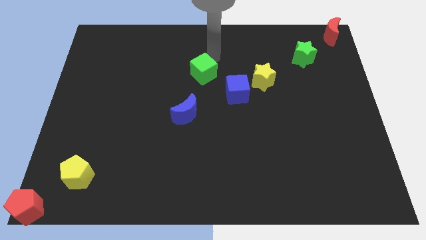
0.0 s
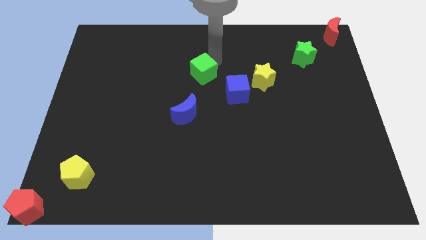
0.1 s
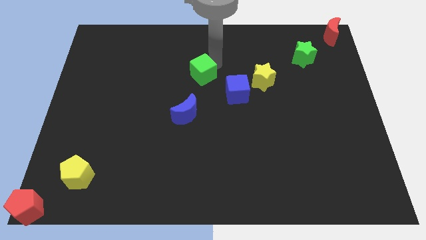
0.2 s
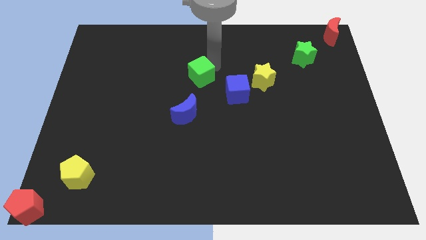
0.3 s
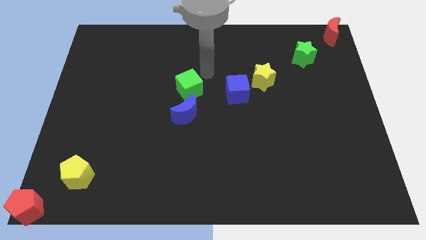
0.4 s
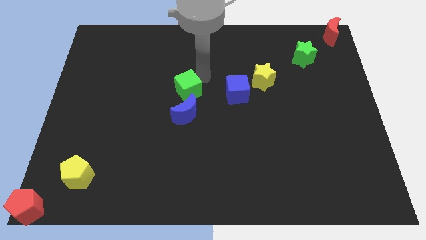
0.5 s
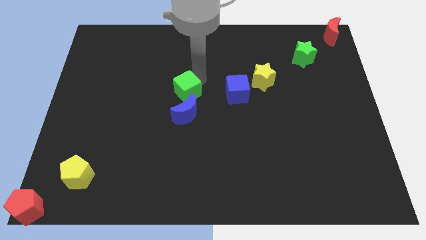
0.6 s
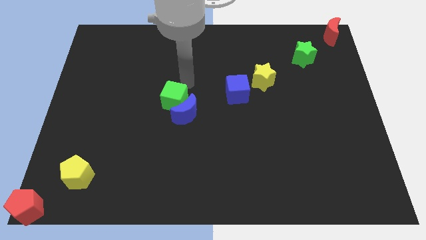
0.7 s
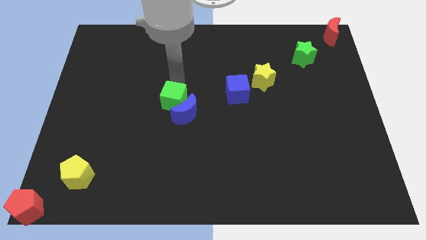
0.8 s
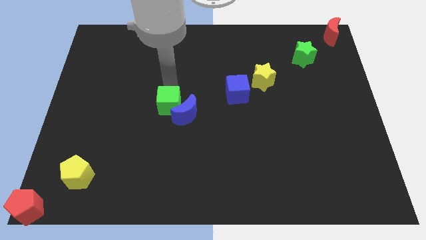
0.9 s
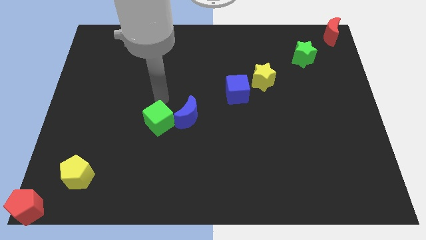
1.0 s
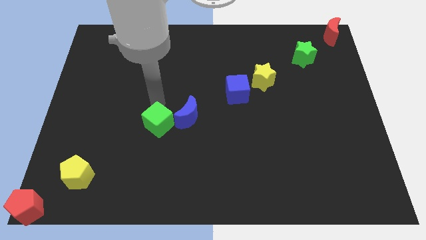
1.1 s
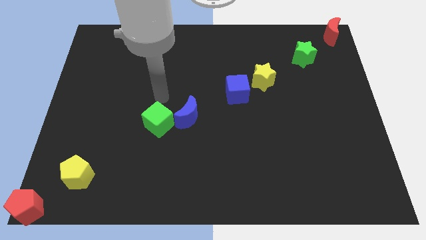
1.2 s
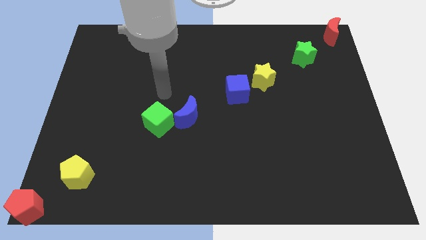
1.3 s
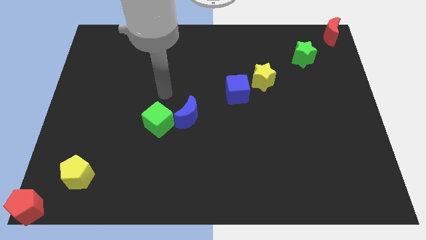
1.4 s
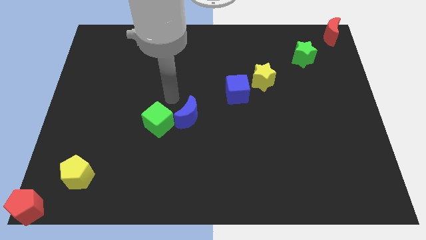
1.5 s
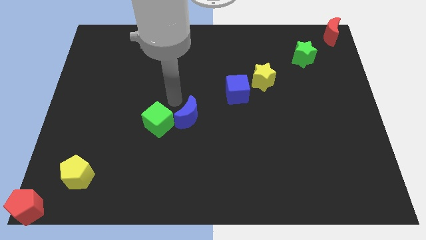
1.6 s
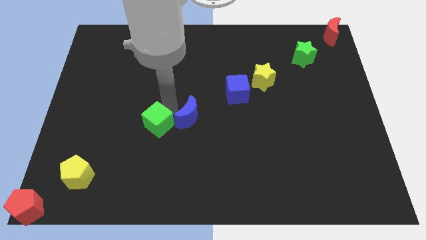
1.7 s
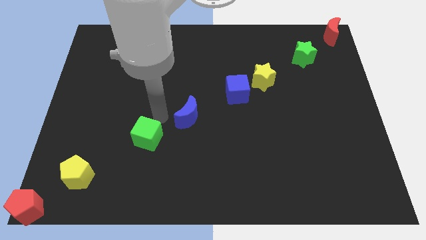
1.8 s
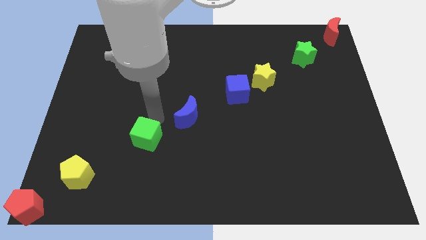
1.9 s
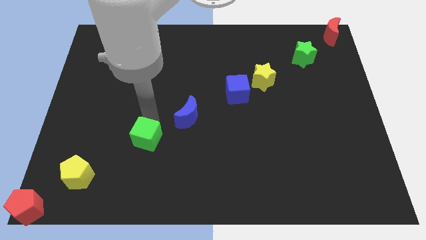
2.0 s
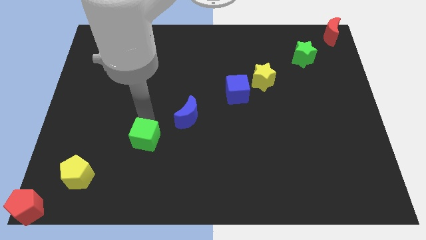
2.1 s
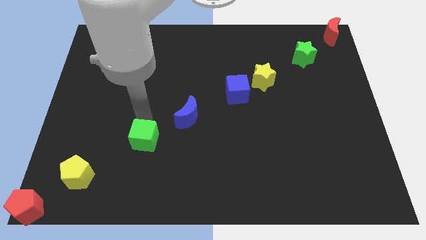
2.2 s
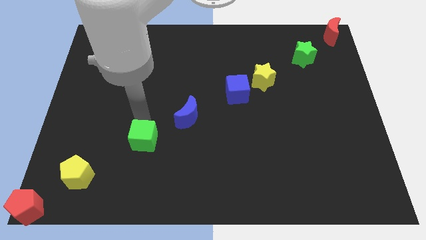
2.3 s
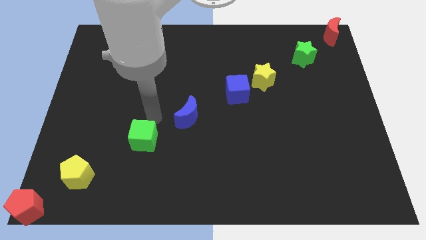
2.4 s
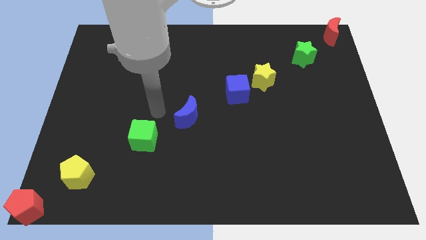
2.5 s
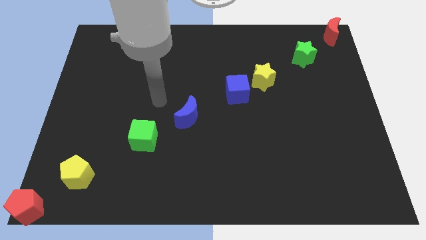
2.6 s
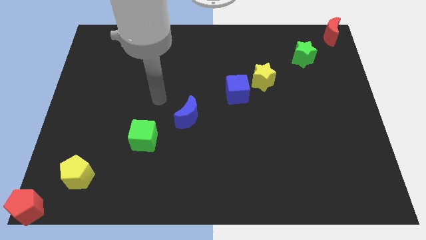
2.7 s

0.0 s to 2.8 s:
place the green cube in between the blue crescent and yellow pentagon

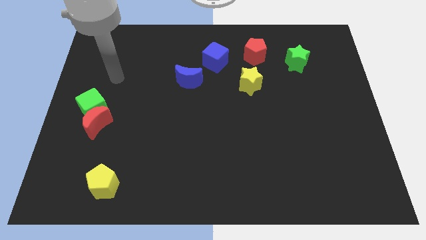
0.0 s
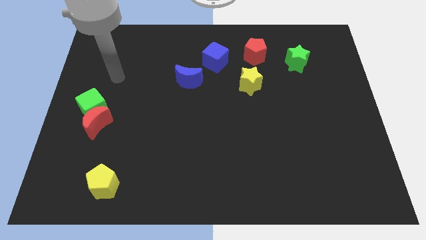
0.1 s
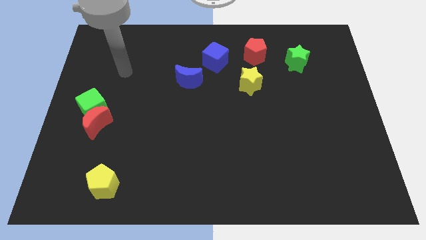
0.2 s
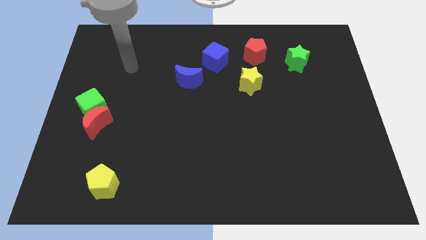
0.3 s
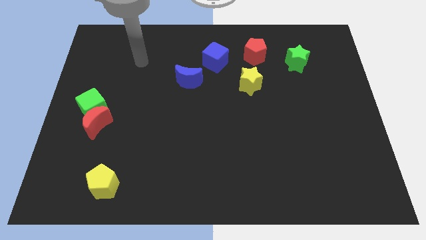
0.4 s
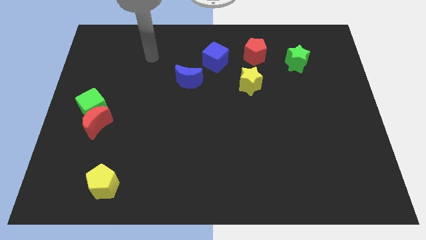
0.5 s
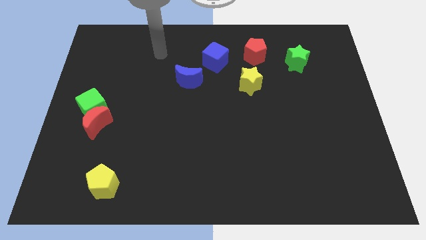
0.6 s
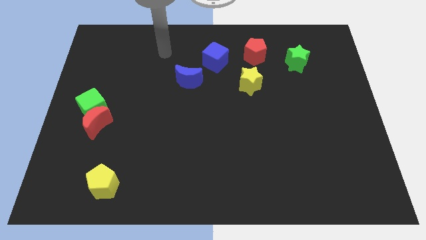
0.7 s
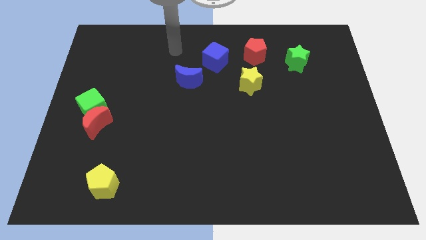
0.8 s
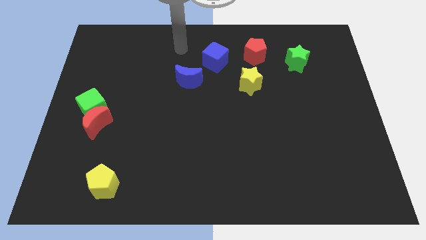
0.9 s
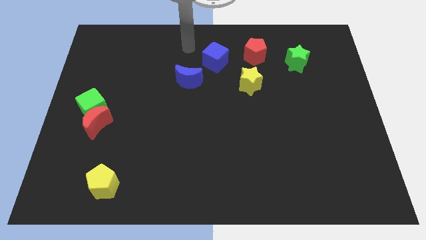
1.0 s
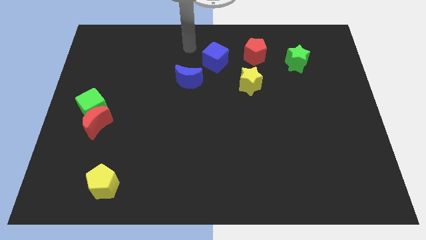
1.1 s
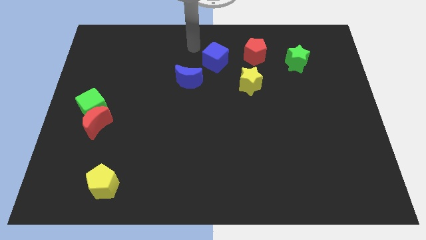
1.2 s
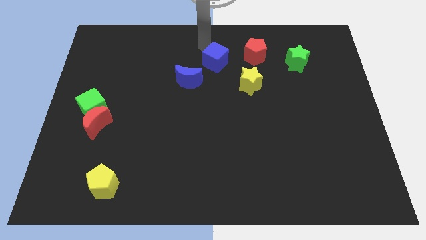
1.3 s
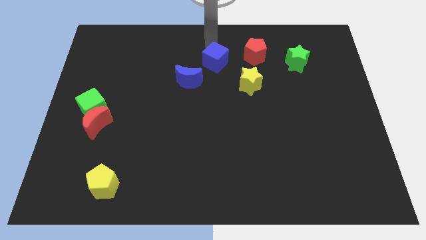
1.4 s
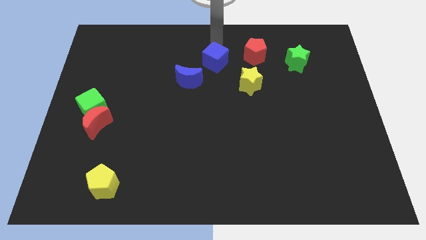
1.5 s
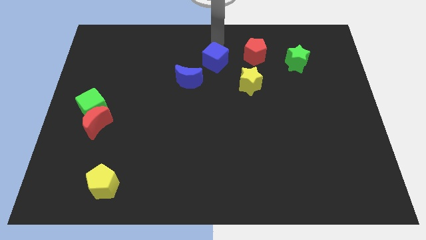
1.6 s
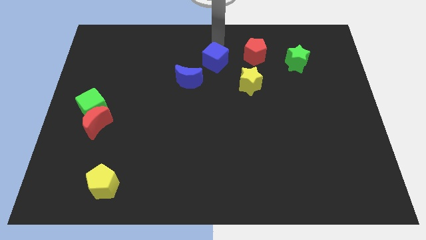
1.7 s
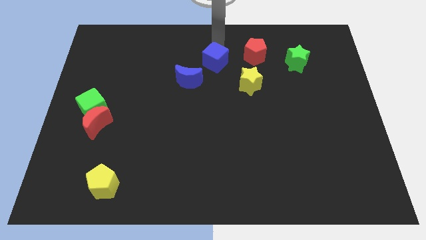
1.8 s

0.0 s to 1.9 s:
move yourself to the top side of the blue cube

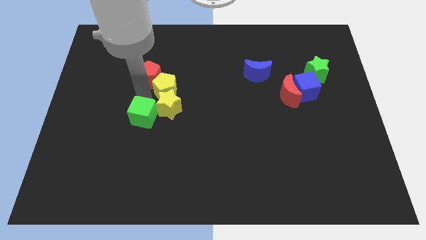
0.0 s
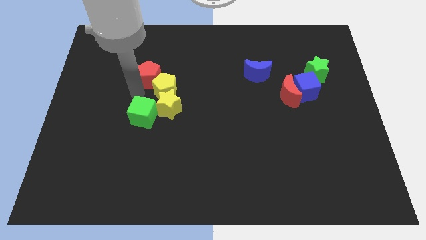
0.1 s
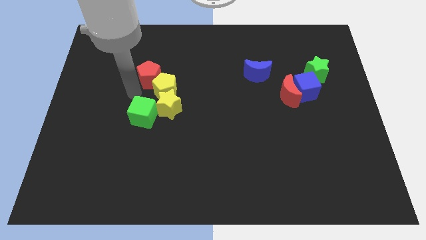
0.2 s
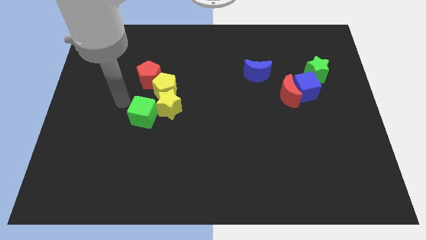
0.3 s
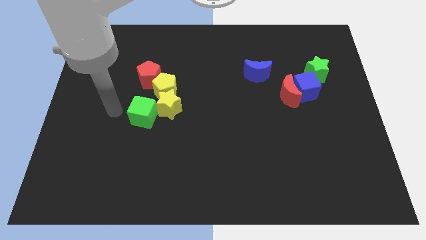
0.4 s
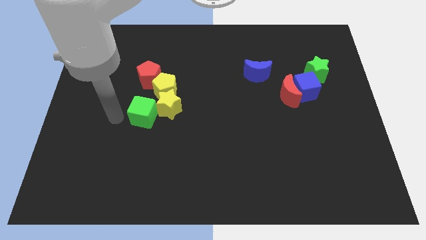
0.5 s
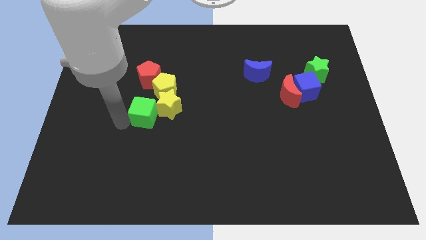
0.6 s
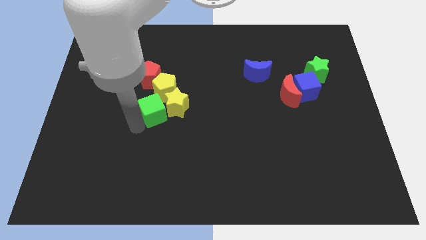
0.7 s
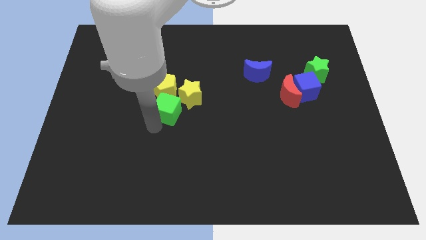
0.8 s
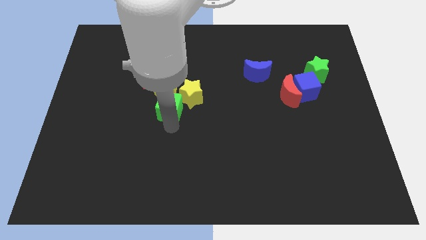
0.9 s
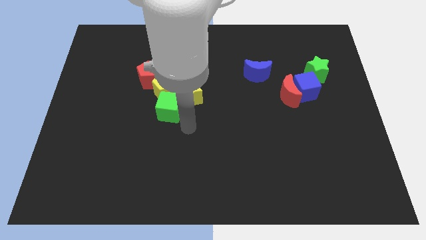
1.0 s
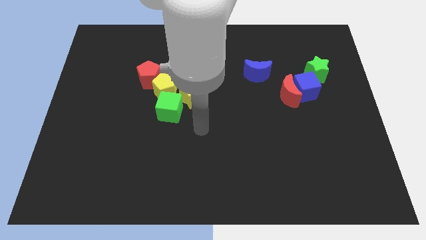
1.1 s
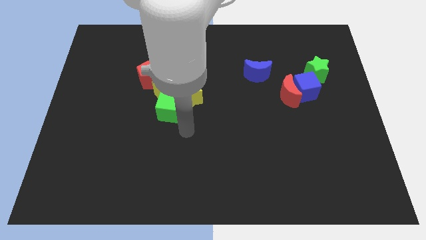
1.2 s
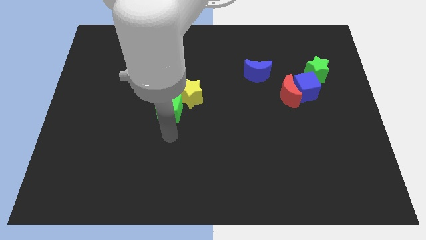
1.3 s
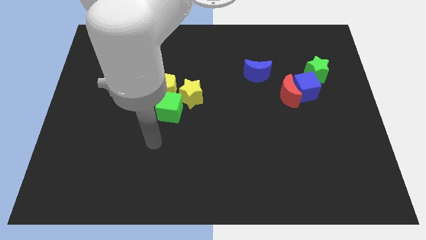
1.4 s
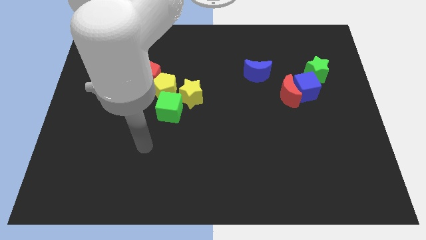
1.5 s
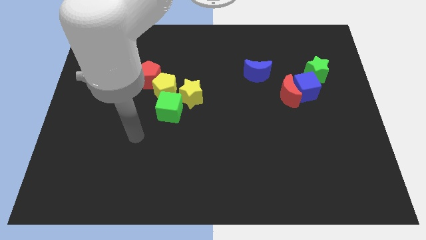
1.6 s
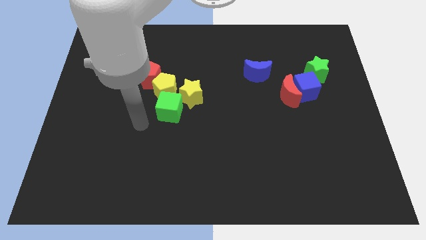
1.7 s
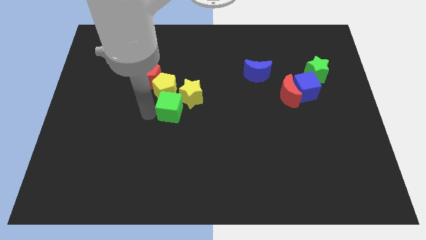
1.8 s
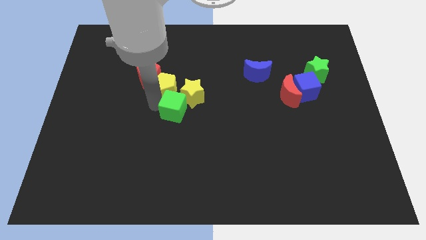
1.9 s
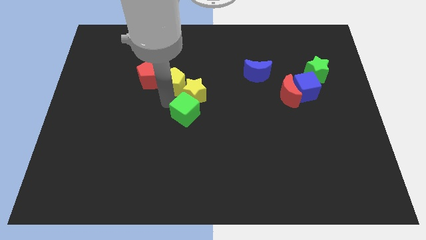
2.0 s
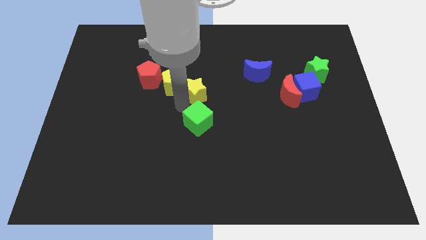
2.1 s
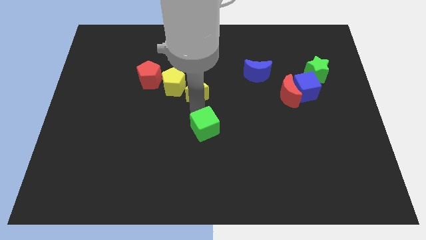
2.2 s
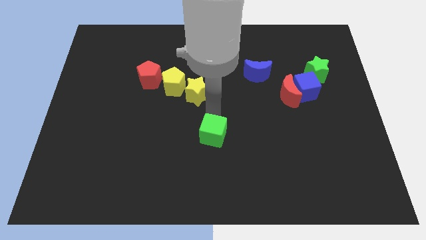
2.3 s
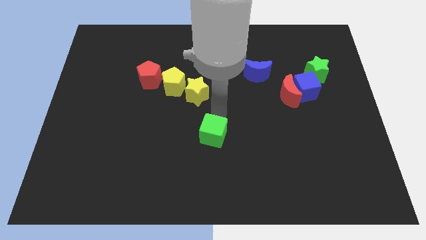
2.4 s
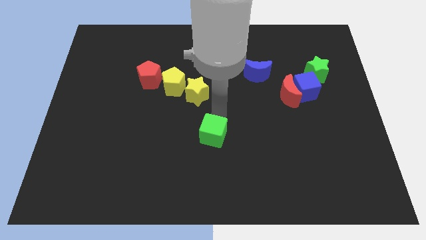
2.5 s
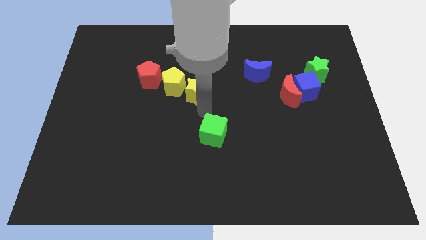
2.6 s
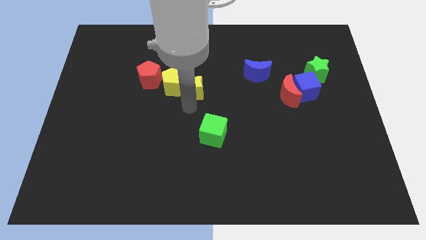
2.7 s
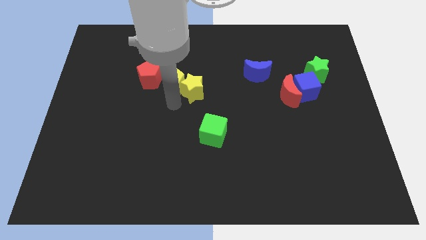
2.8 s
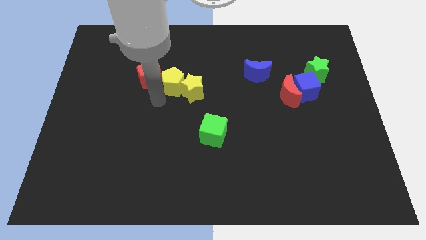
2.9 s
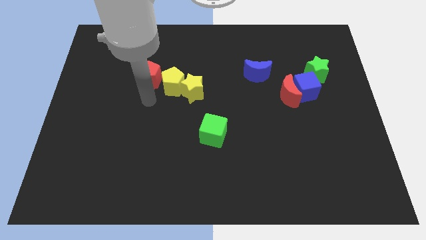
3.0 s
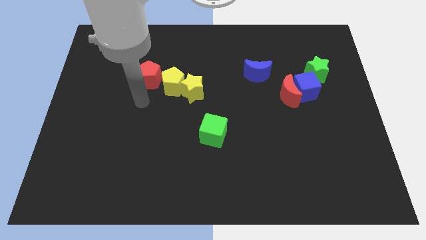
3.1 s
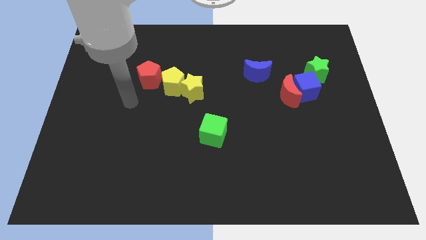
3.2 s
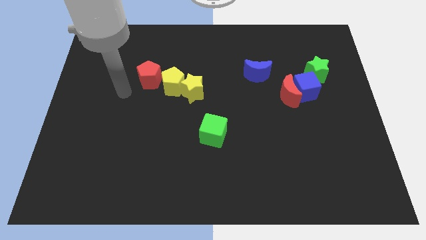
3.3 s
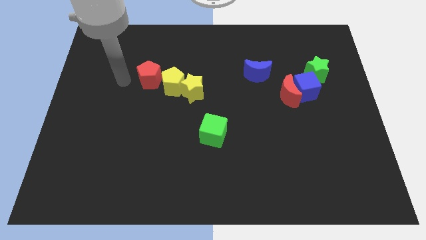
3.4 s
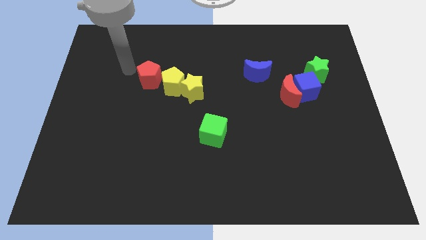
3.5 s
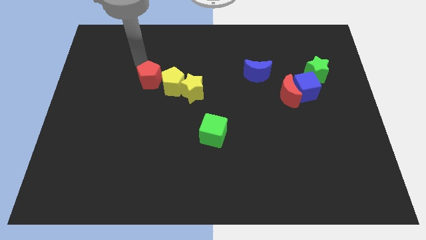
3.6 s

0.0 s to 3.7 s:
separate green cube from the group of blocks

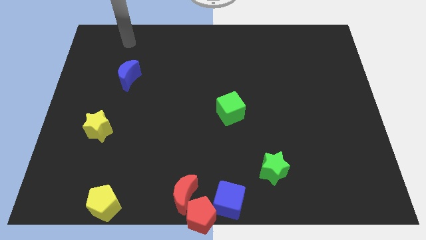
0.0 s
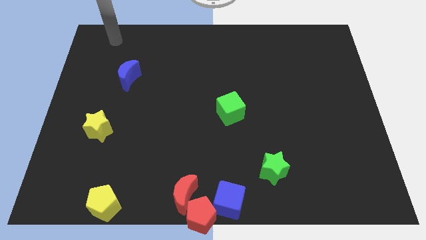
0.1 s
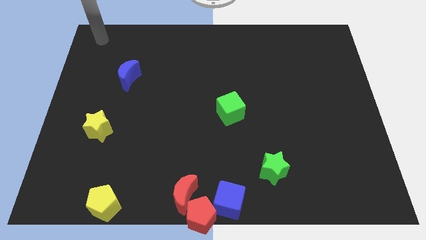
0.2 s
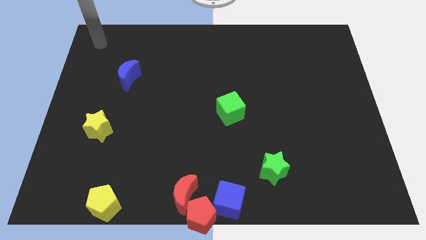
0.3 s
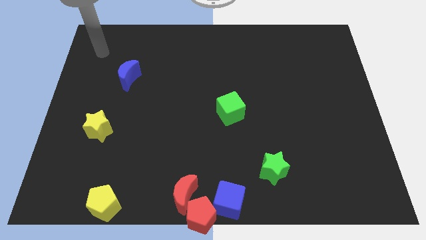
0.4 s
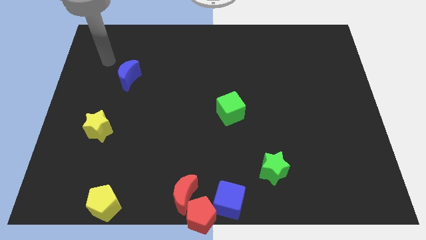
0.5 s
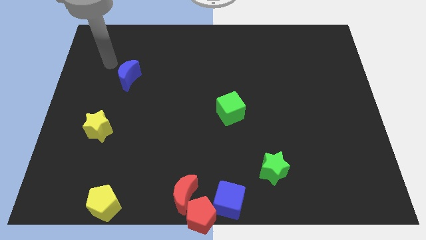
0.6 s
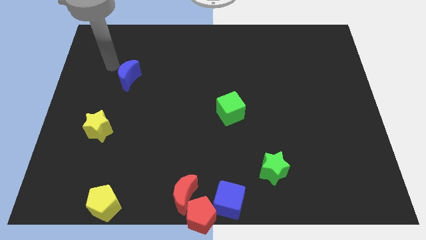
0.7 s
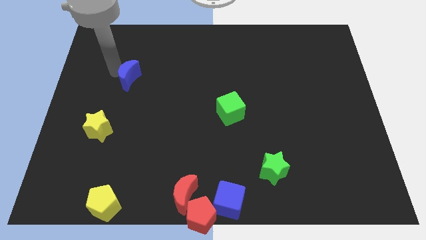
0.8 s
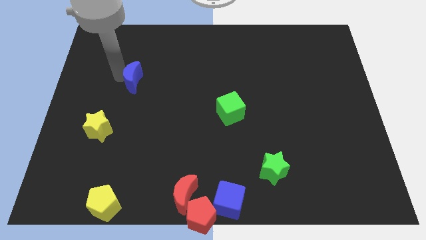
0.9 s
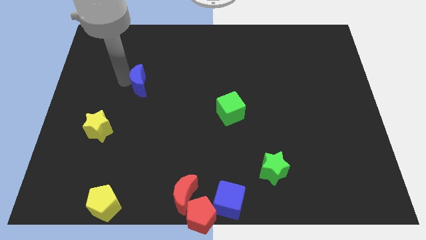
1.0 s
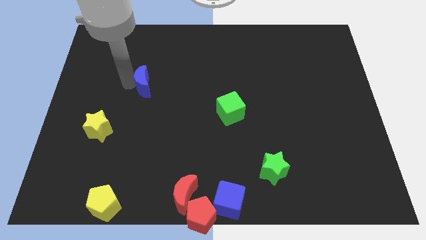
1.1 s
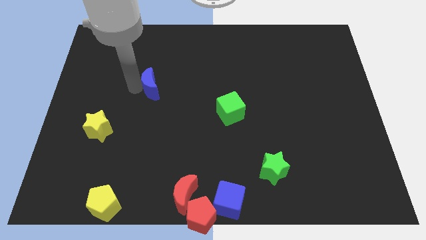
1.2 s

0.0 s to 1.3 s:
push the blue crescent slightly to the right
